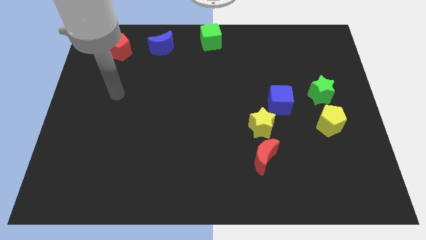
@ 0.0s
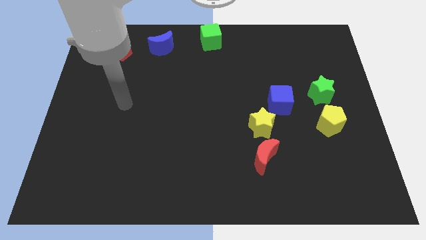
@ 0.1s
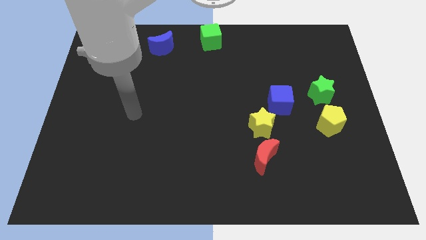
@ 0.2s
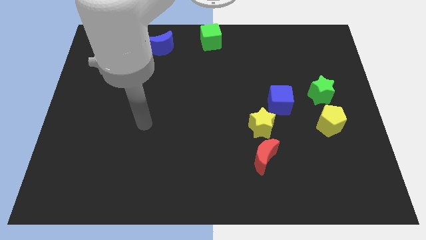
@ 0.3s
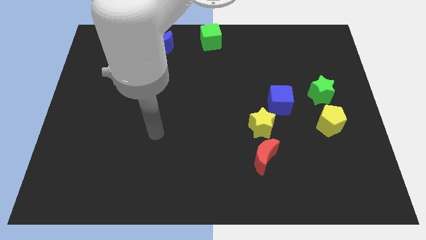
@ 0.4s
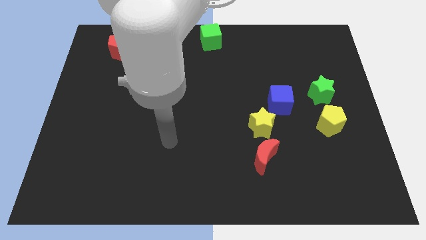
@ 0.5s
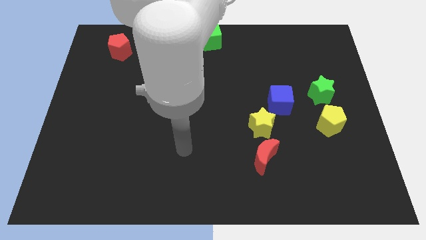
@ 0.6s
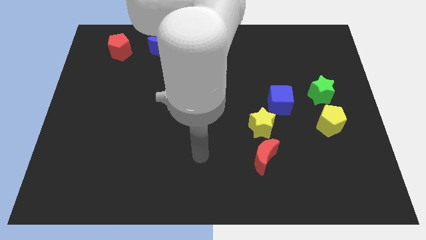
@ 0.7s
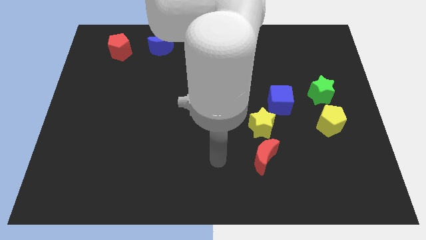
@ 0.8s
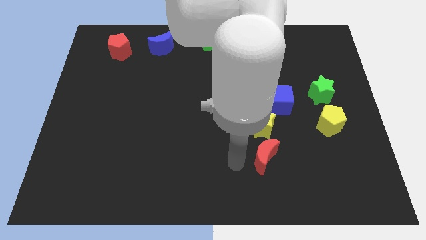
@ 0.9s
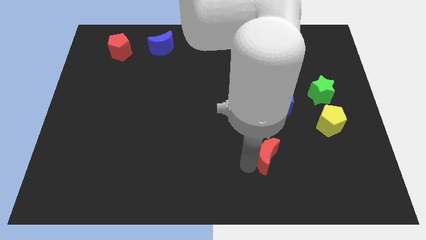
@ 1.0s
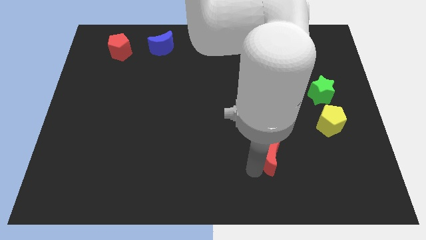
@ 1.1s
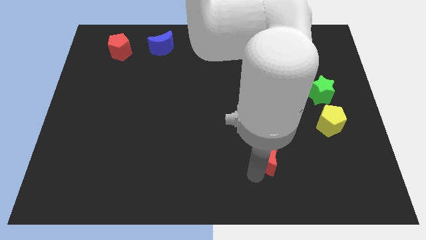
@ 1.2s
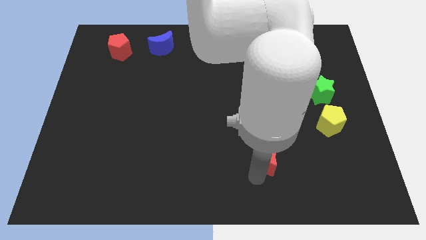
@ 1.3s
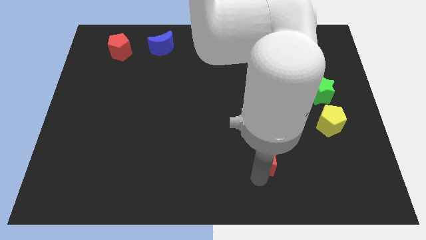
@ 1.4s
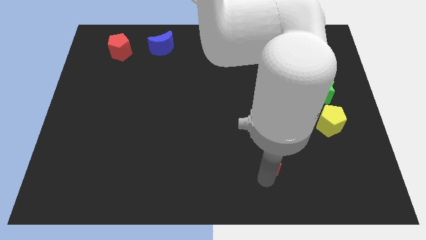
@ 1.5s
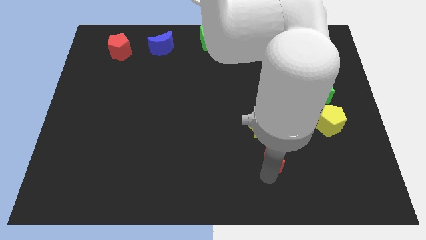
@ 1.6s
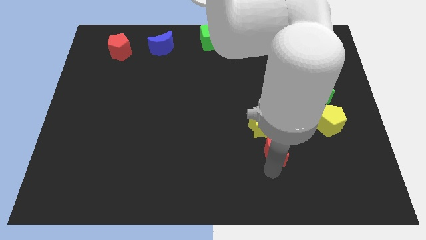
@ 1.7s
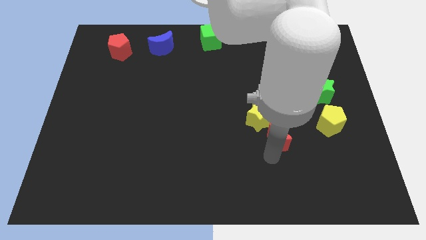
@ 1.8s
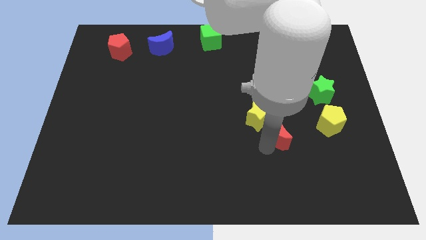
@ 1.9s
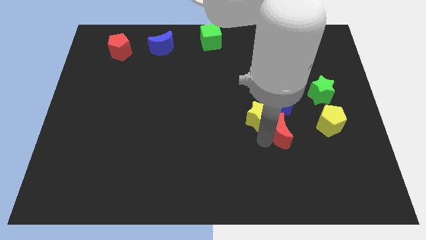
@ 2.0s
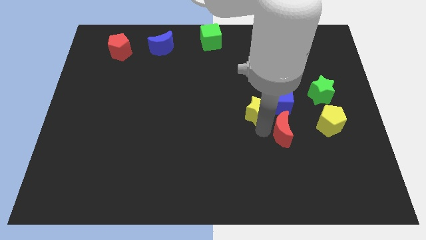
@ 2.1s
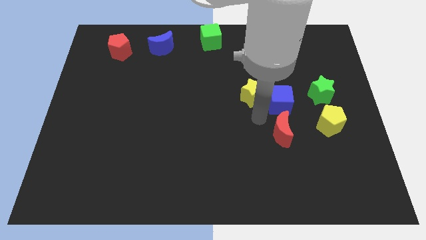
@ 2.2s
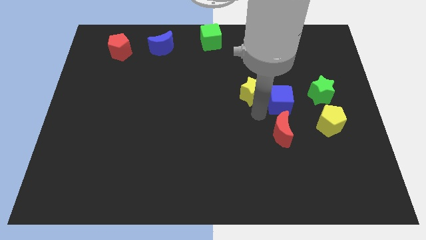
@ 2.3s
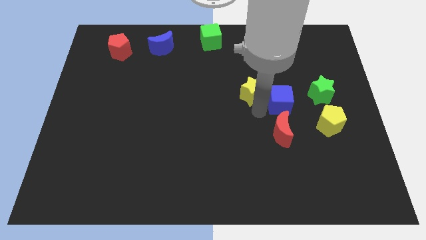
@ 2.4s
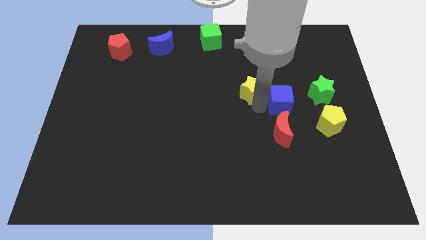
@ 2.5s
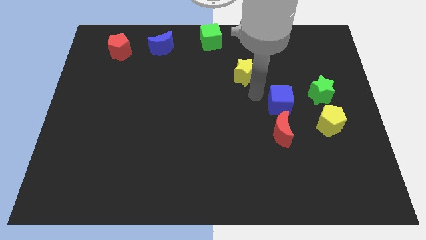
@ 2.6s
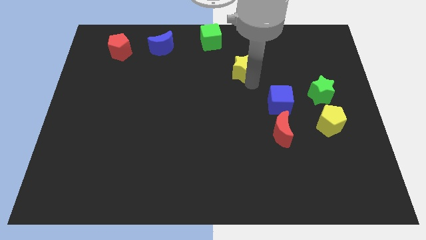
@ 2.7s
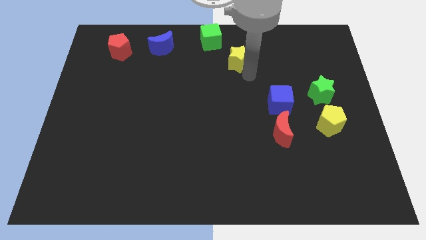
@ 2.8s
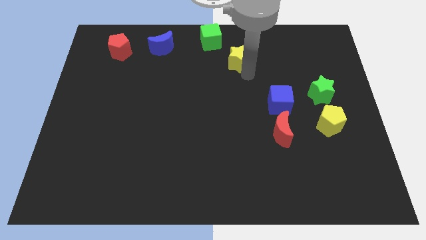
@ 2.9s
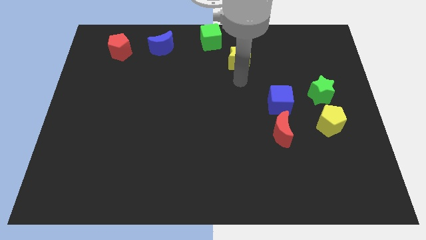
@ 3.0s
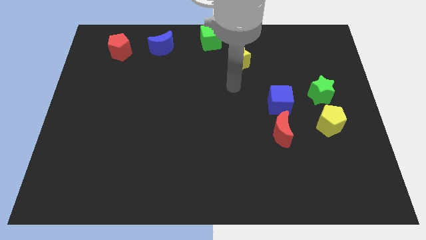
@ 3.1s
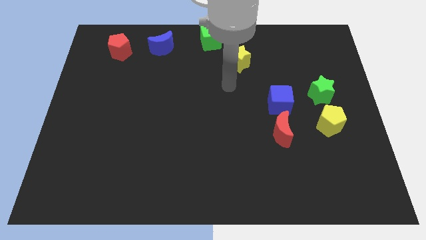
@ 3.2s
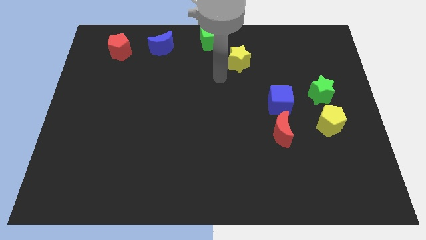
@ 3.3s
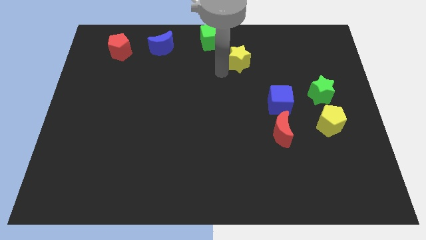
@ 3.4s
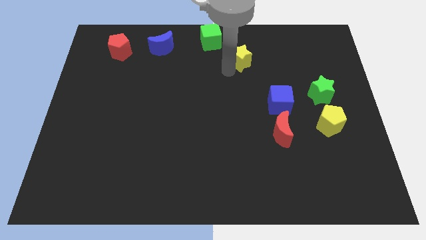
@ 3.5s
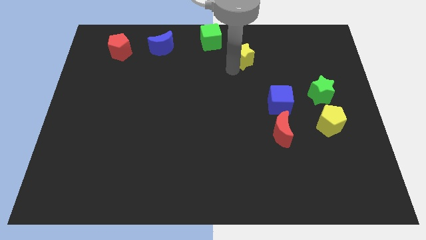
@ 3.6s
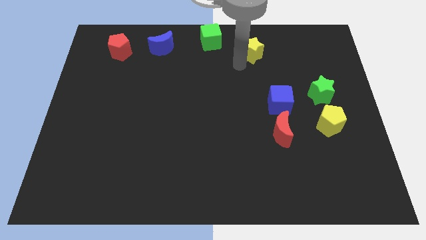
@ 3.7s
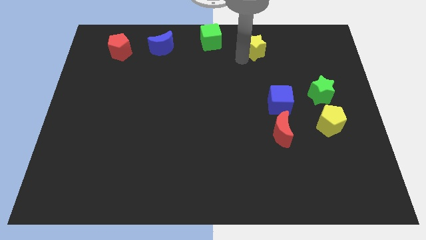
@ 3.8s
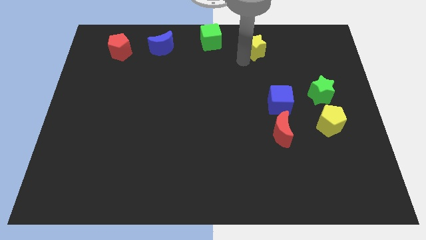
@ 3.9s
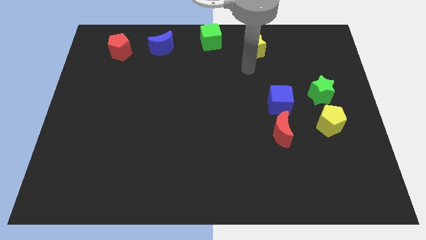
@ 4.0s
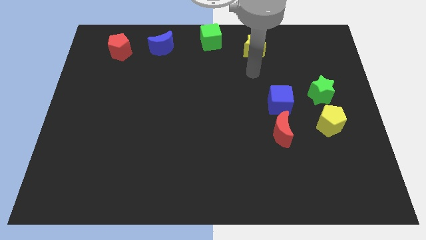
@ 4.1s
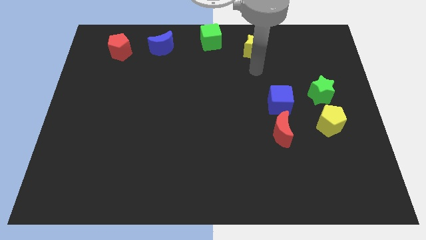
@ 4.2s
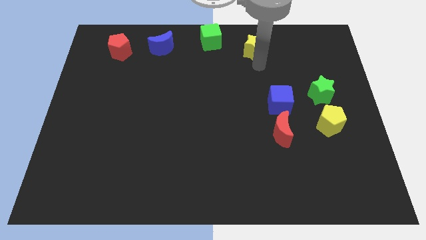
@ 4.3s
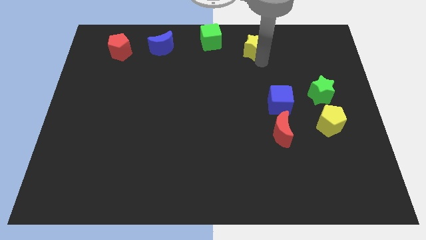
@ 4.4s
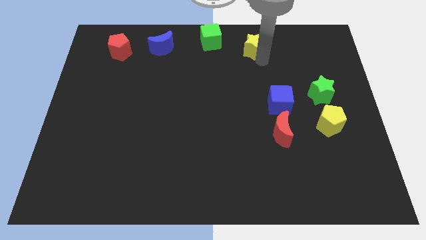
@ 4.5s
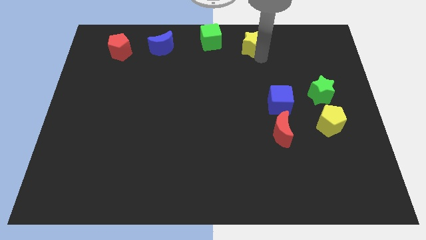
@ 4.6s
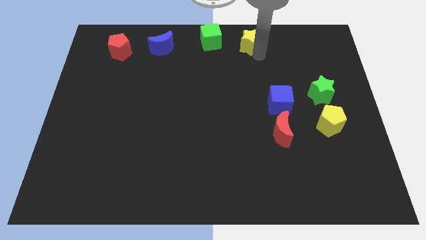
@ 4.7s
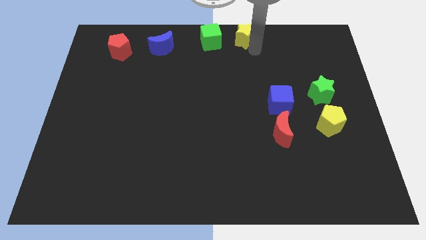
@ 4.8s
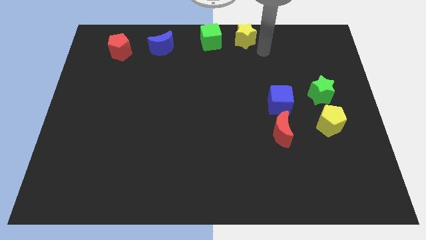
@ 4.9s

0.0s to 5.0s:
place the yellow star to the right of the green cube

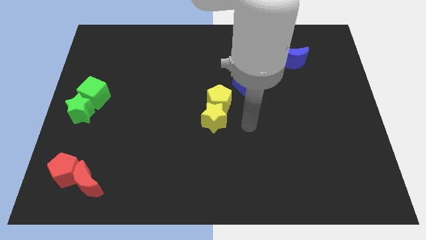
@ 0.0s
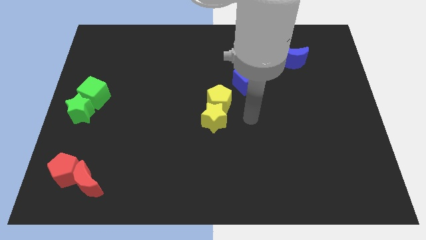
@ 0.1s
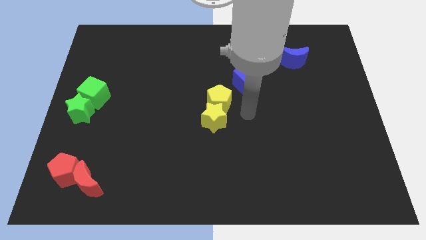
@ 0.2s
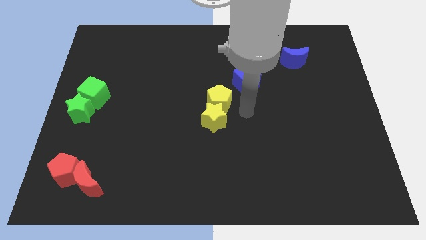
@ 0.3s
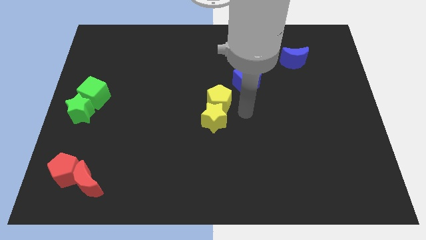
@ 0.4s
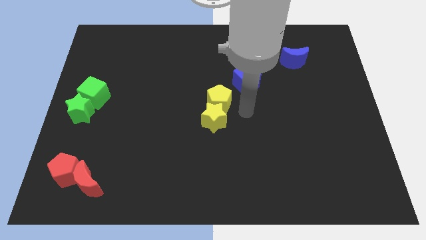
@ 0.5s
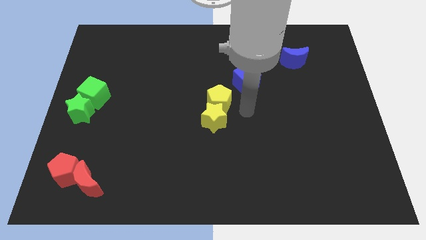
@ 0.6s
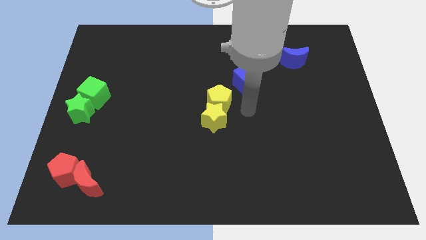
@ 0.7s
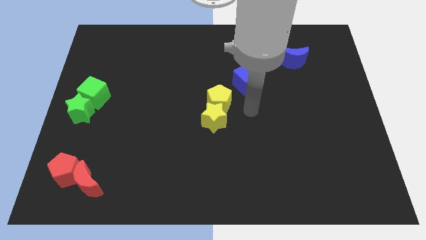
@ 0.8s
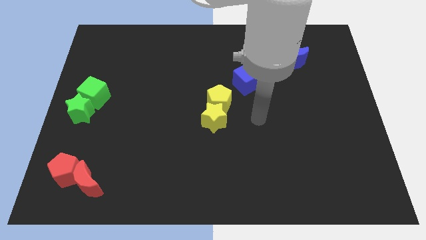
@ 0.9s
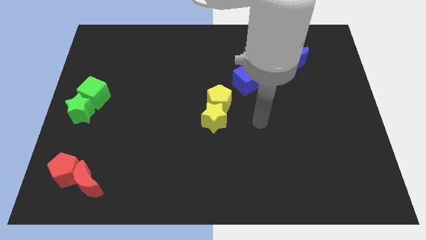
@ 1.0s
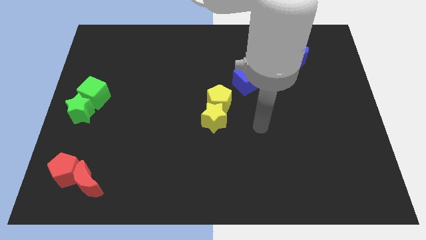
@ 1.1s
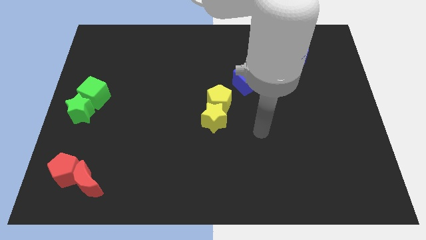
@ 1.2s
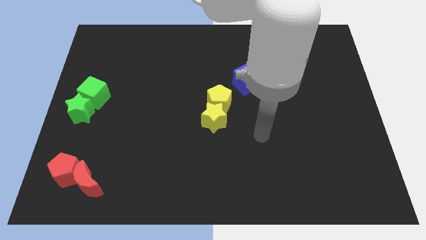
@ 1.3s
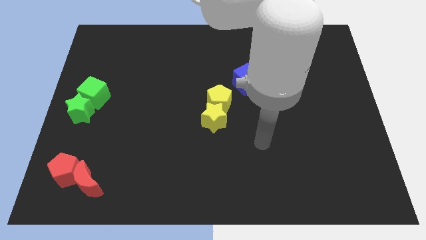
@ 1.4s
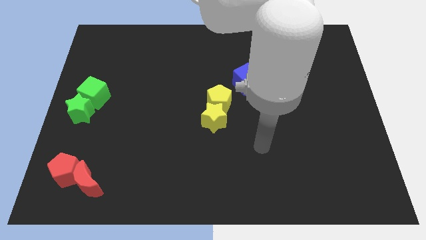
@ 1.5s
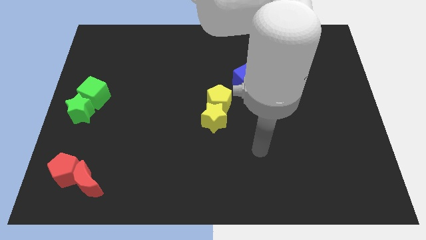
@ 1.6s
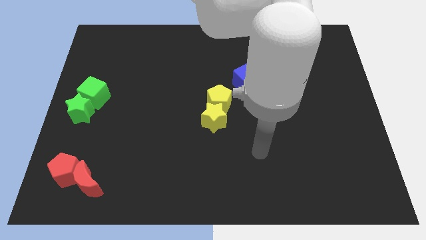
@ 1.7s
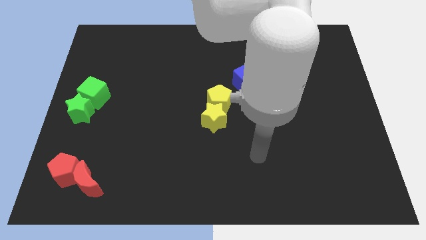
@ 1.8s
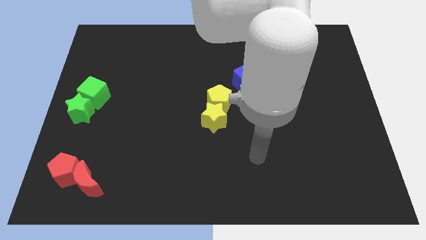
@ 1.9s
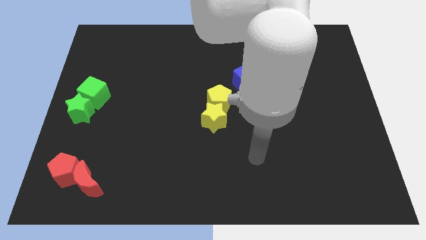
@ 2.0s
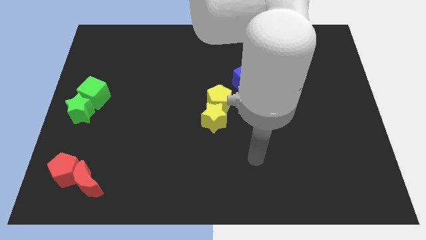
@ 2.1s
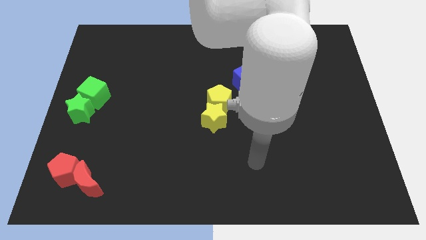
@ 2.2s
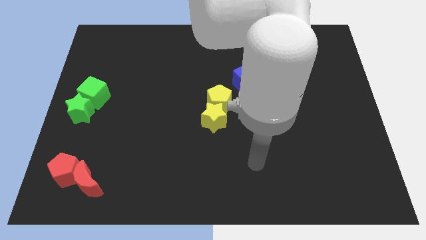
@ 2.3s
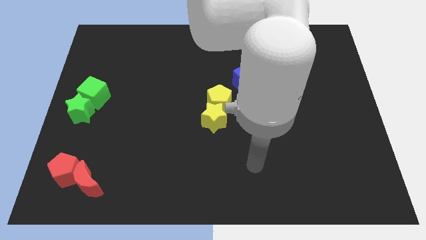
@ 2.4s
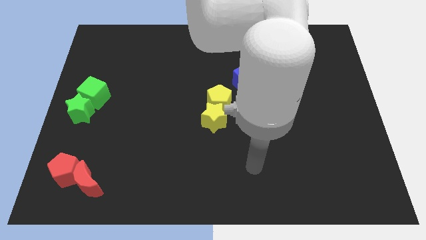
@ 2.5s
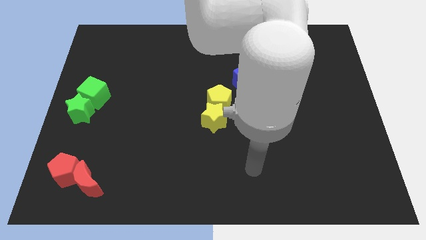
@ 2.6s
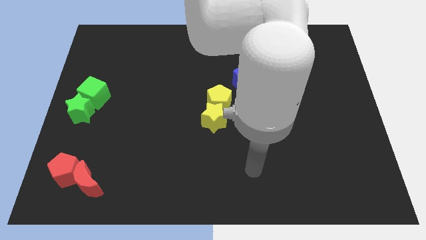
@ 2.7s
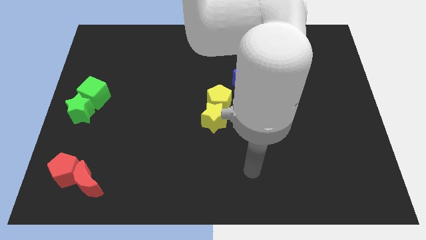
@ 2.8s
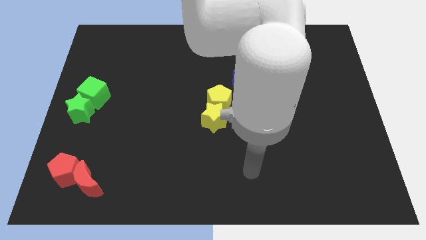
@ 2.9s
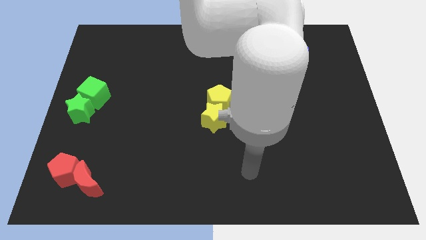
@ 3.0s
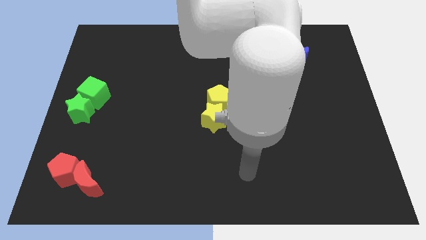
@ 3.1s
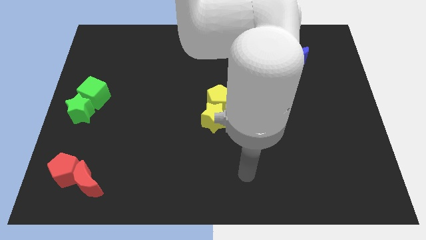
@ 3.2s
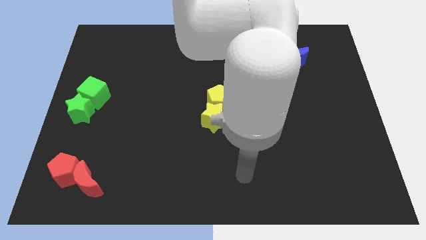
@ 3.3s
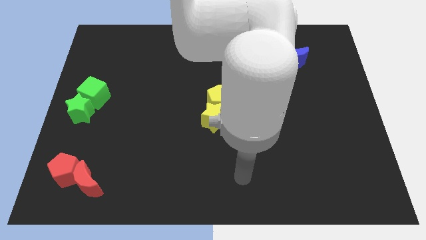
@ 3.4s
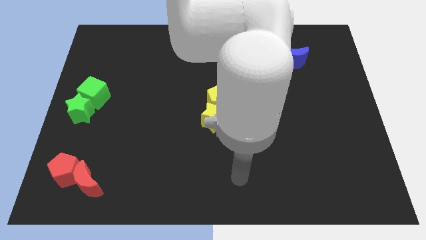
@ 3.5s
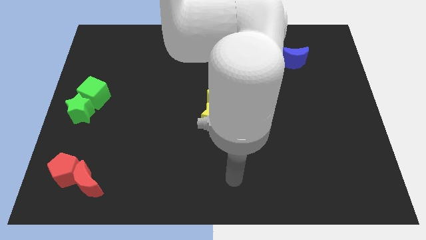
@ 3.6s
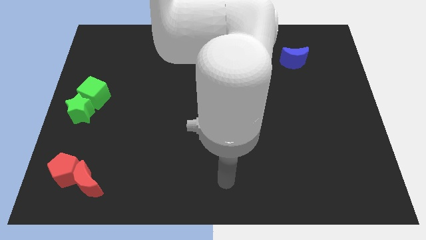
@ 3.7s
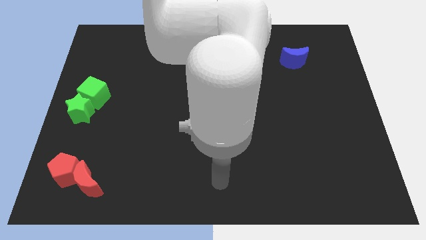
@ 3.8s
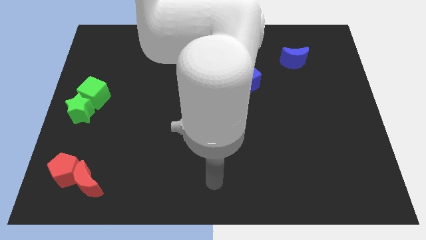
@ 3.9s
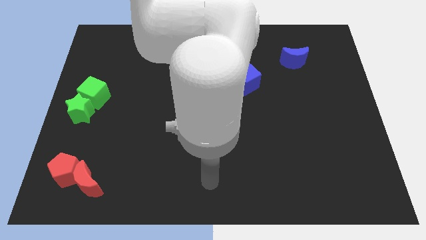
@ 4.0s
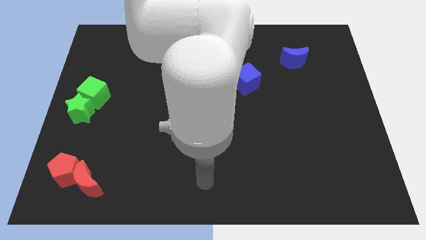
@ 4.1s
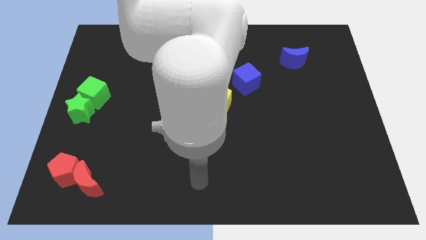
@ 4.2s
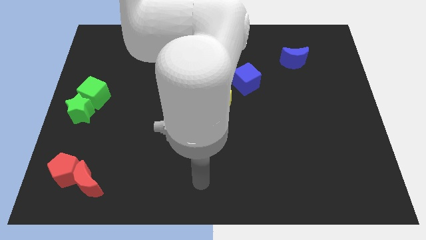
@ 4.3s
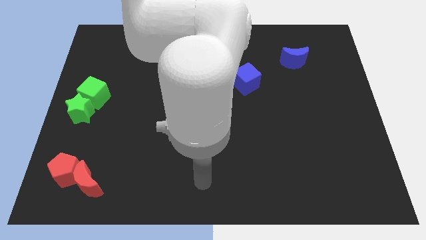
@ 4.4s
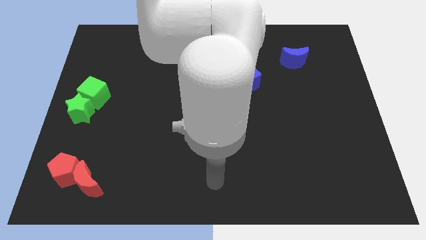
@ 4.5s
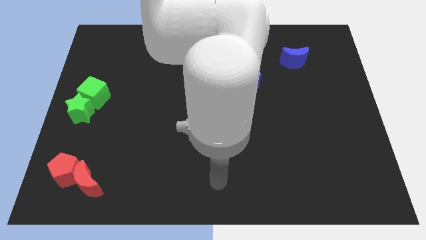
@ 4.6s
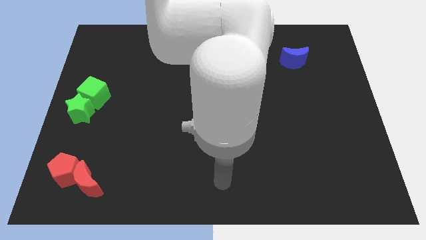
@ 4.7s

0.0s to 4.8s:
point your arm to the right of the red crescent
